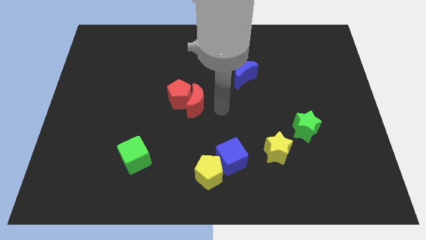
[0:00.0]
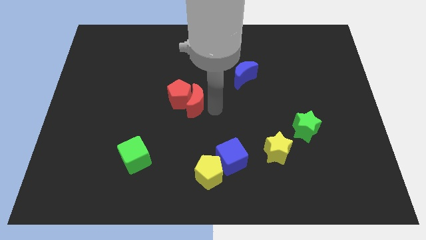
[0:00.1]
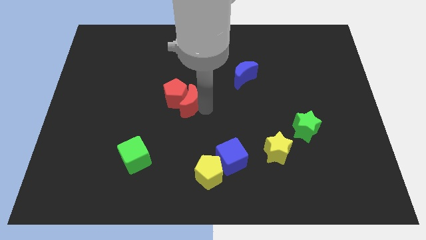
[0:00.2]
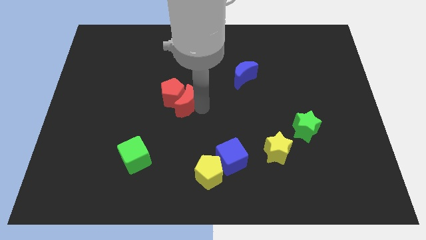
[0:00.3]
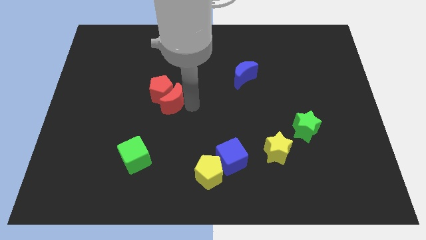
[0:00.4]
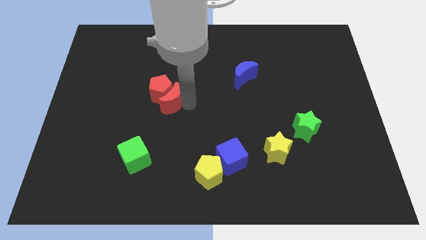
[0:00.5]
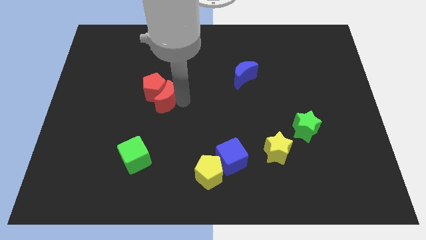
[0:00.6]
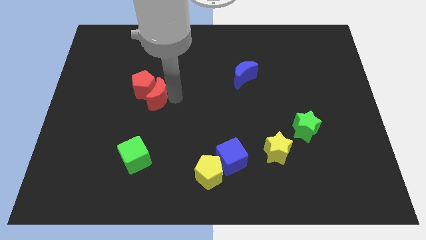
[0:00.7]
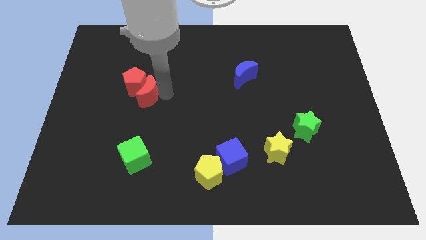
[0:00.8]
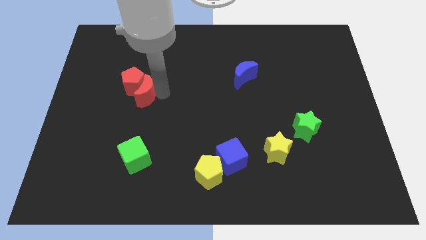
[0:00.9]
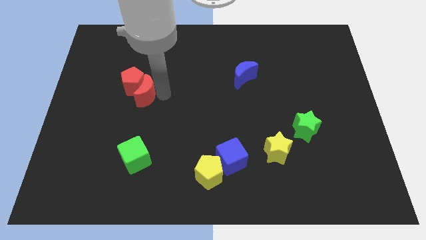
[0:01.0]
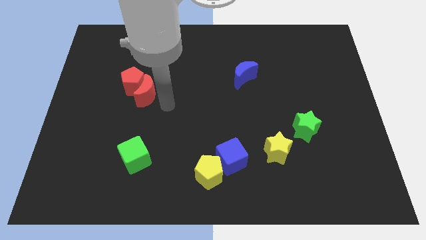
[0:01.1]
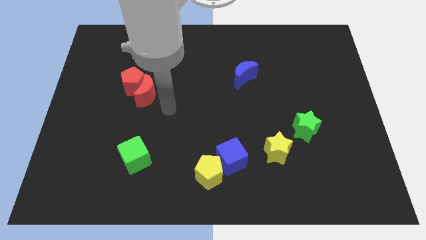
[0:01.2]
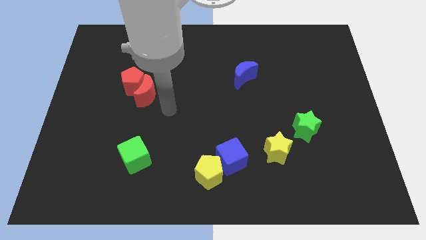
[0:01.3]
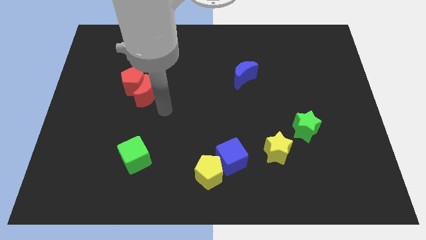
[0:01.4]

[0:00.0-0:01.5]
place the red crescent vertically above the green cube

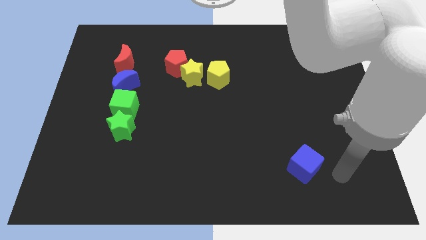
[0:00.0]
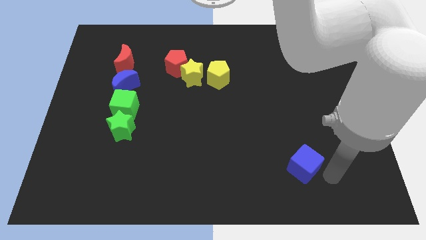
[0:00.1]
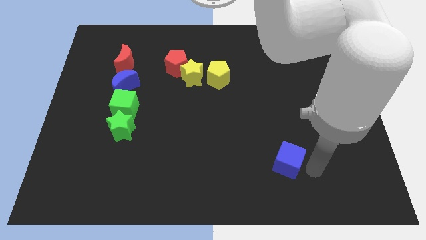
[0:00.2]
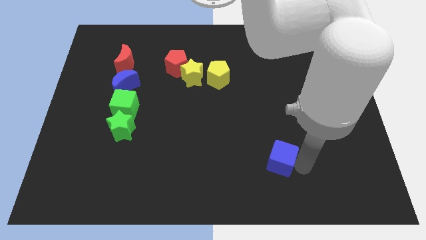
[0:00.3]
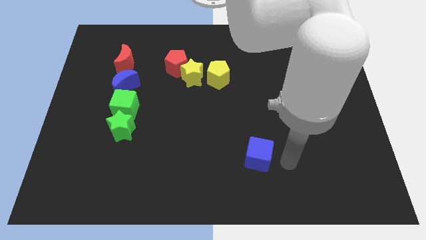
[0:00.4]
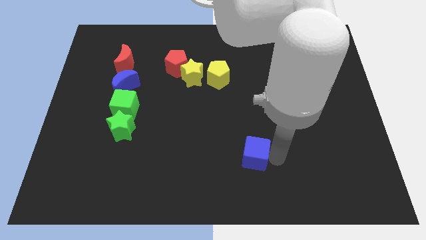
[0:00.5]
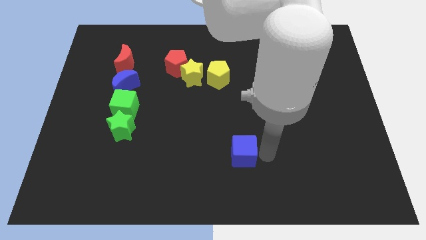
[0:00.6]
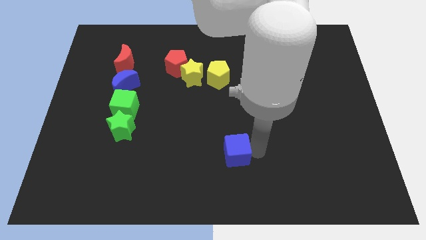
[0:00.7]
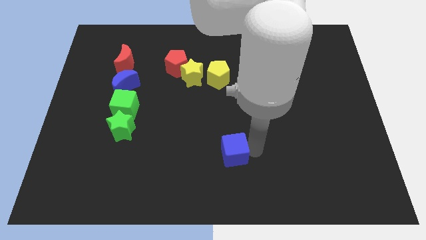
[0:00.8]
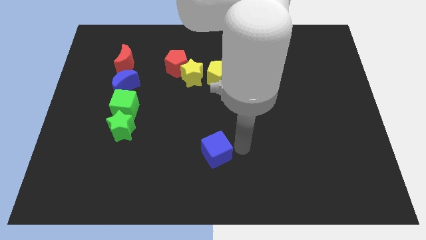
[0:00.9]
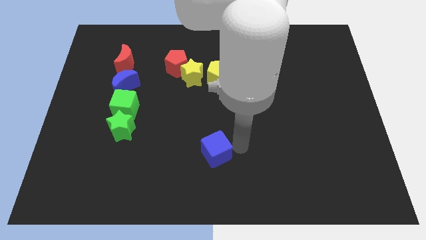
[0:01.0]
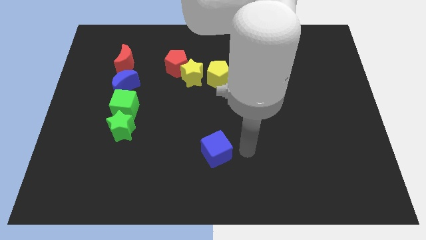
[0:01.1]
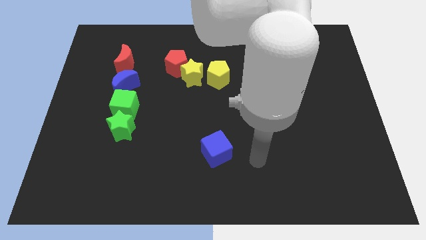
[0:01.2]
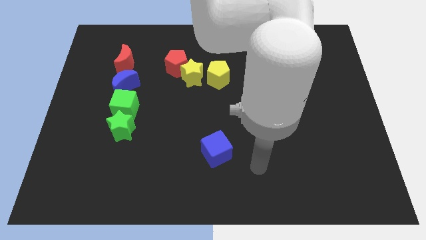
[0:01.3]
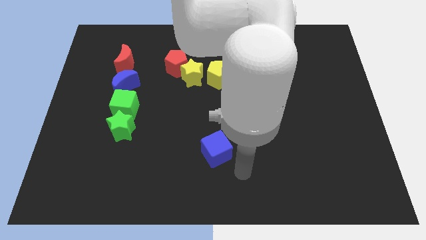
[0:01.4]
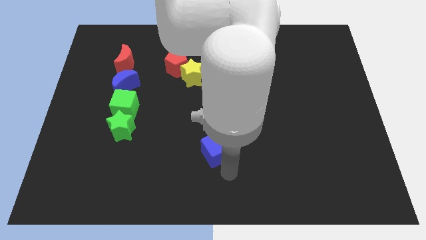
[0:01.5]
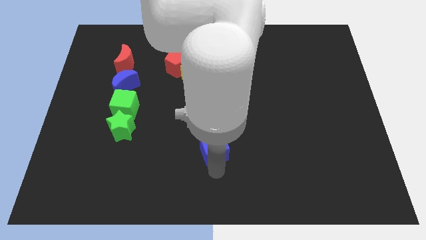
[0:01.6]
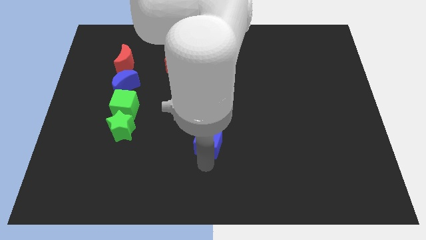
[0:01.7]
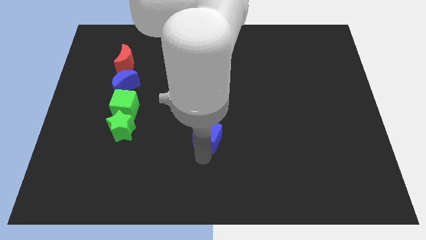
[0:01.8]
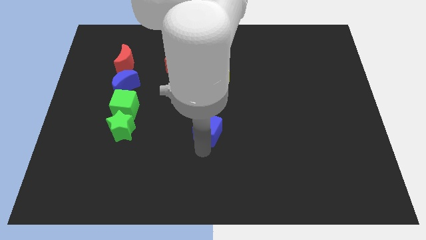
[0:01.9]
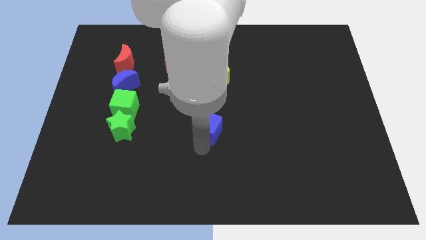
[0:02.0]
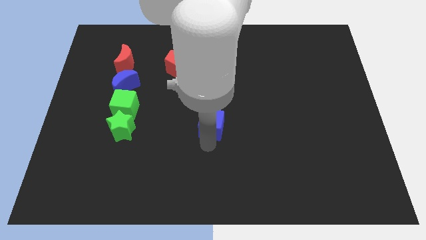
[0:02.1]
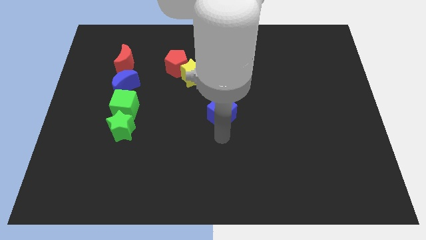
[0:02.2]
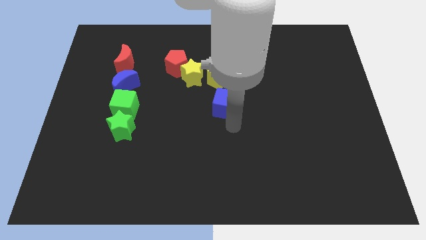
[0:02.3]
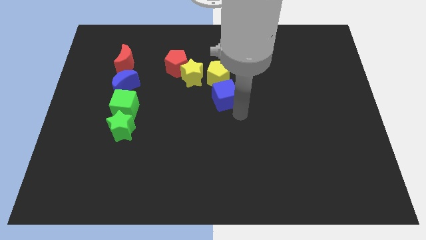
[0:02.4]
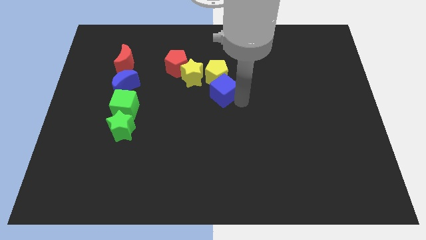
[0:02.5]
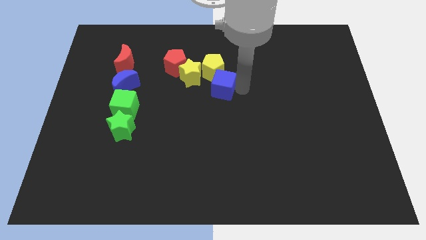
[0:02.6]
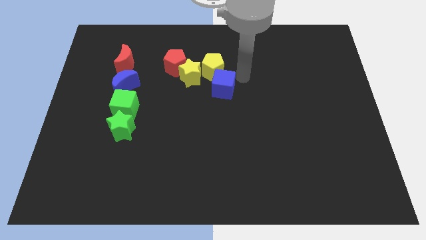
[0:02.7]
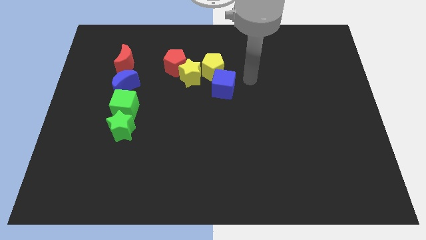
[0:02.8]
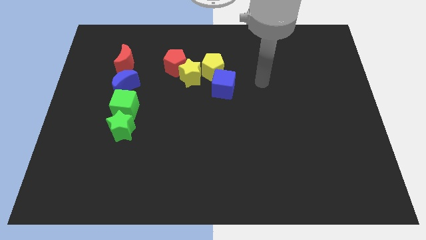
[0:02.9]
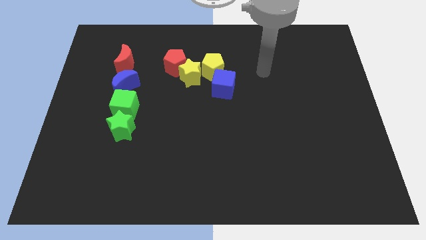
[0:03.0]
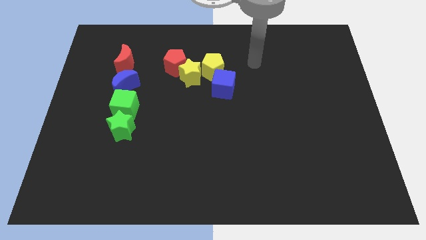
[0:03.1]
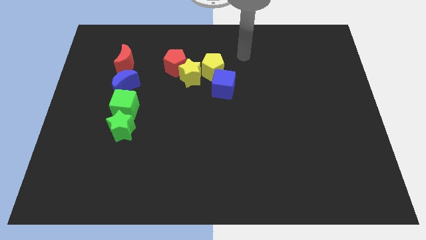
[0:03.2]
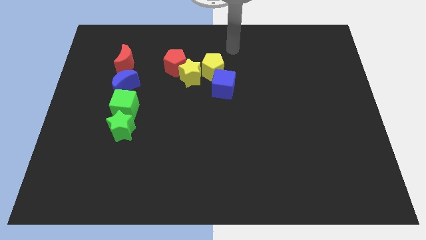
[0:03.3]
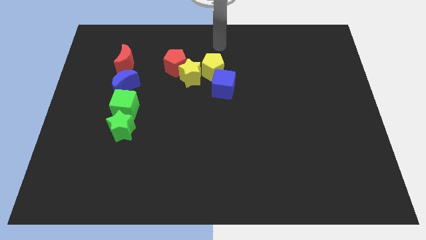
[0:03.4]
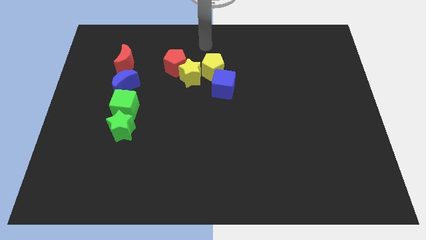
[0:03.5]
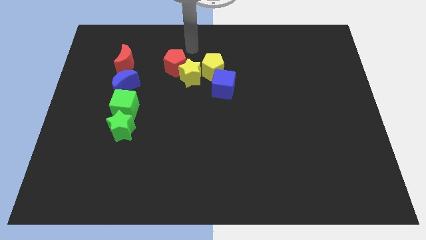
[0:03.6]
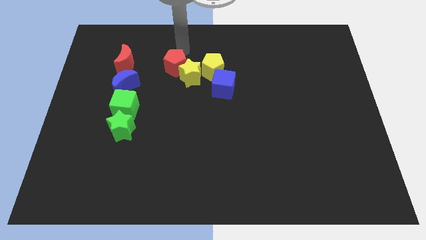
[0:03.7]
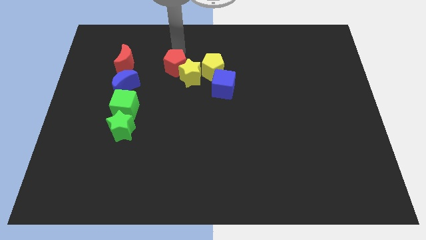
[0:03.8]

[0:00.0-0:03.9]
drag the blue cube and place it below the yellow pentagon

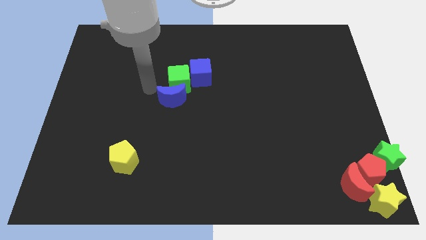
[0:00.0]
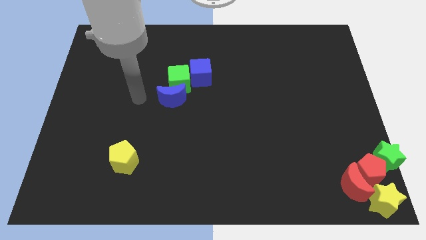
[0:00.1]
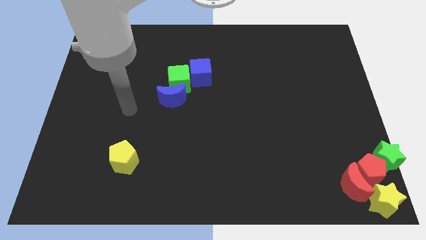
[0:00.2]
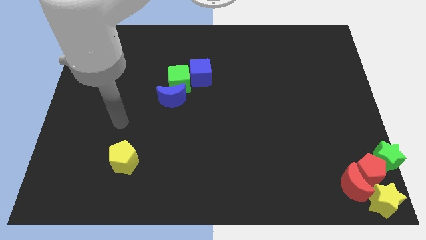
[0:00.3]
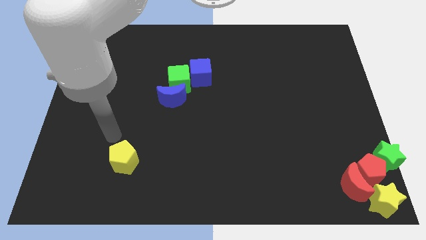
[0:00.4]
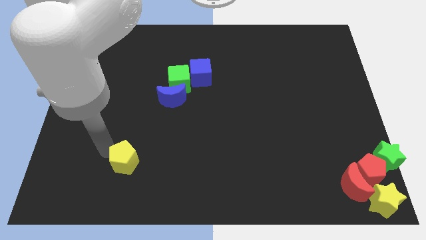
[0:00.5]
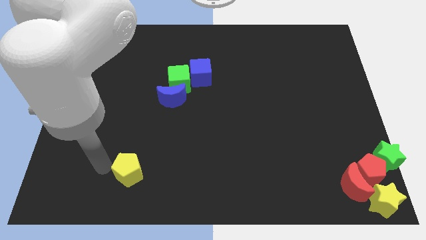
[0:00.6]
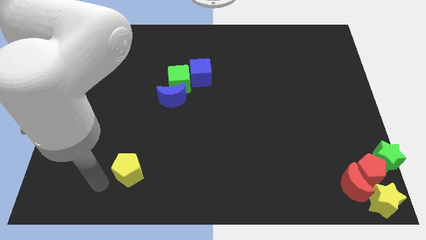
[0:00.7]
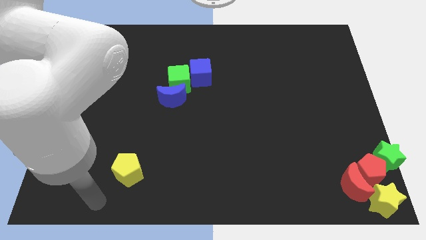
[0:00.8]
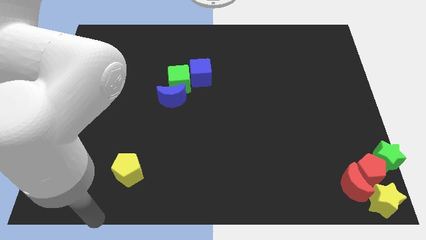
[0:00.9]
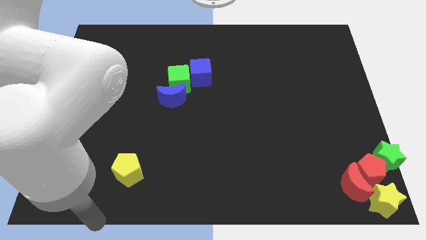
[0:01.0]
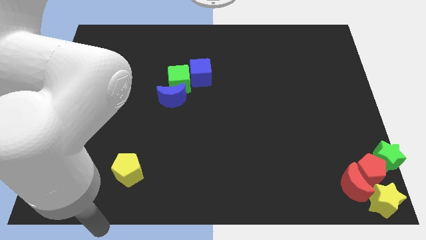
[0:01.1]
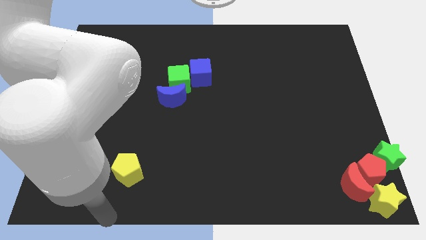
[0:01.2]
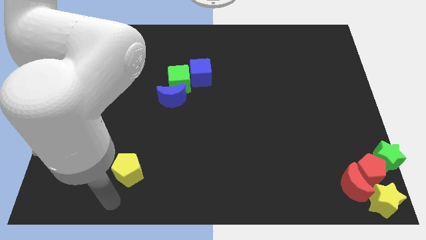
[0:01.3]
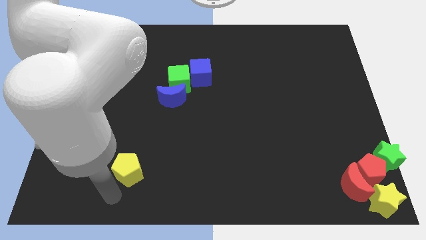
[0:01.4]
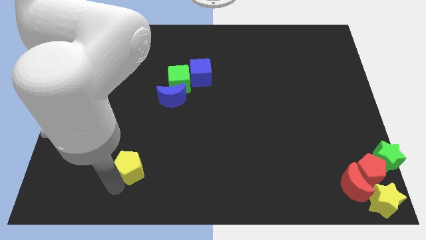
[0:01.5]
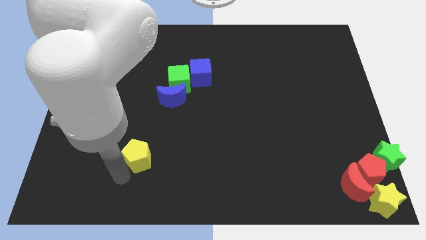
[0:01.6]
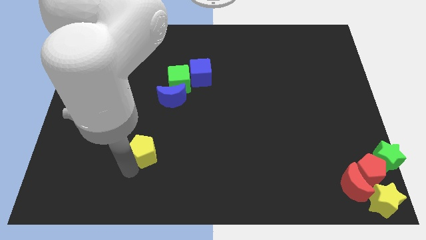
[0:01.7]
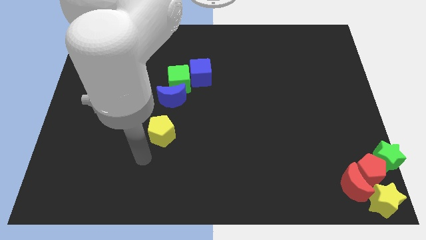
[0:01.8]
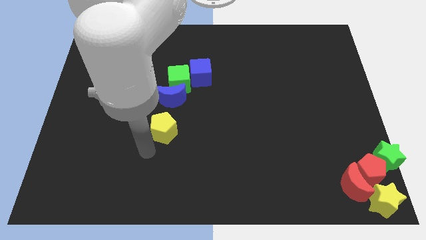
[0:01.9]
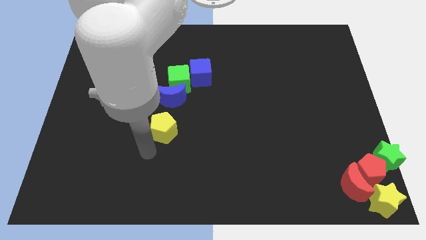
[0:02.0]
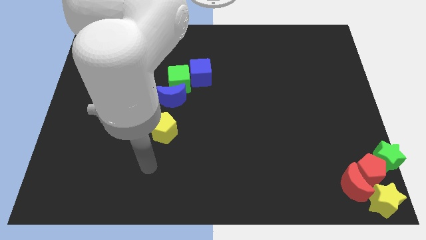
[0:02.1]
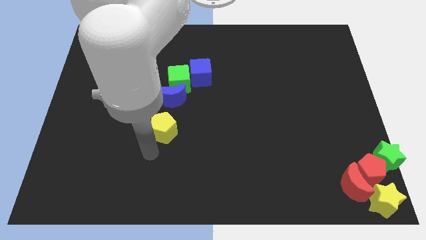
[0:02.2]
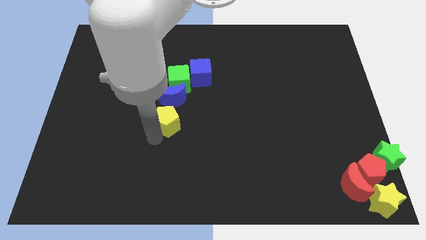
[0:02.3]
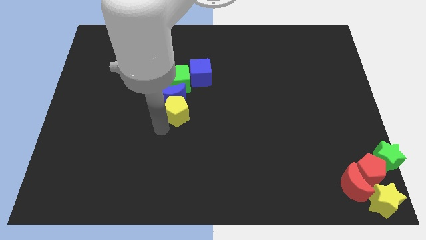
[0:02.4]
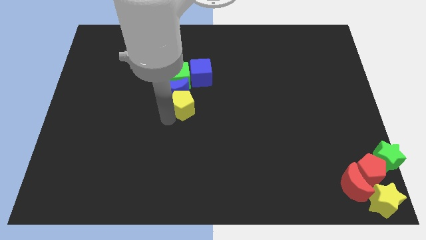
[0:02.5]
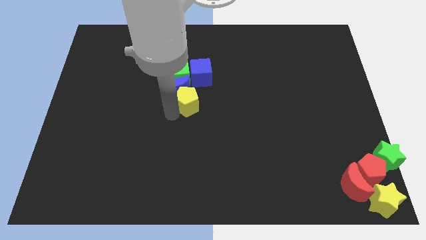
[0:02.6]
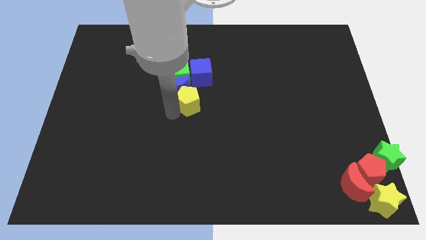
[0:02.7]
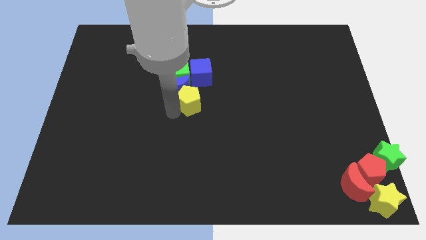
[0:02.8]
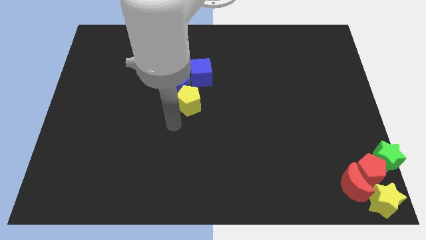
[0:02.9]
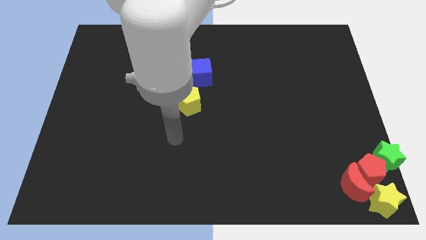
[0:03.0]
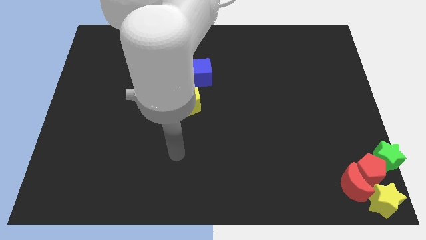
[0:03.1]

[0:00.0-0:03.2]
move the yellow pentagon to the bottom side of the blue crescent

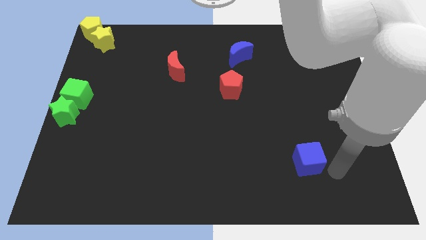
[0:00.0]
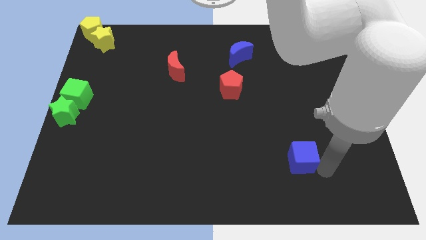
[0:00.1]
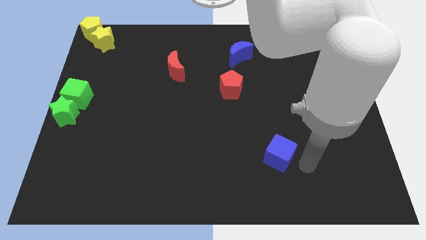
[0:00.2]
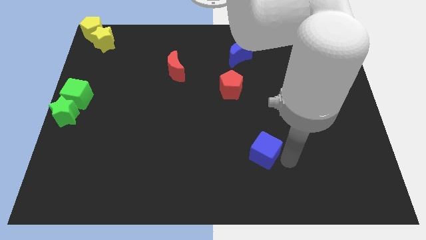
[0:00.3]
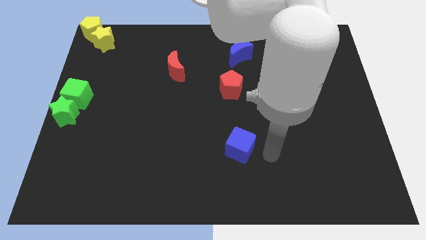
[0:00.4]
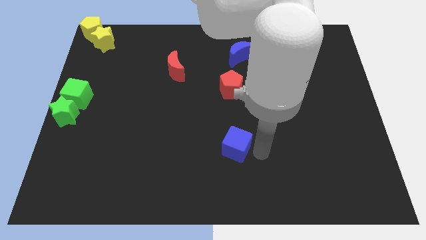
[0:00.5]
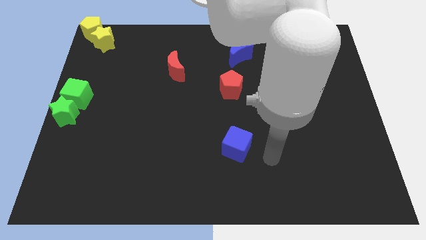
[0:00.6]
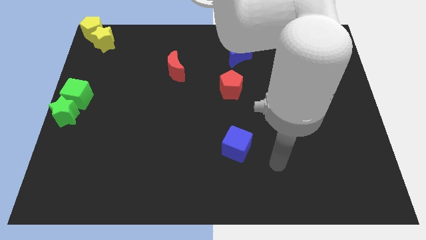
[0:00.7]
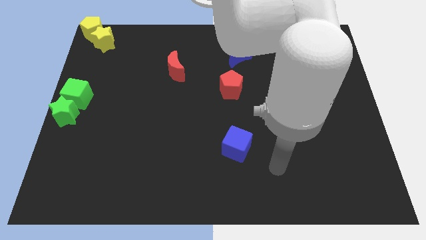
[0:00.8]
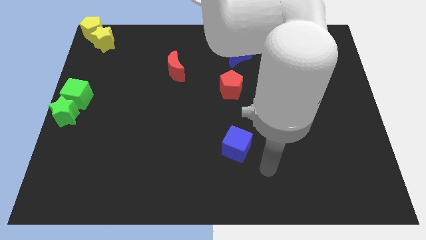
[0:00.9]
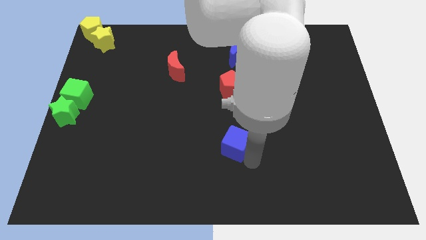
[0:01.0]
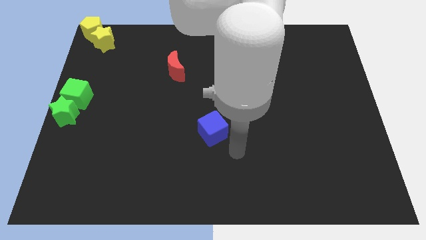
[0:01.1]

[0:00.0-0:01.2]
place the blue cube below the red pentagon
